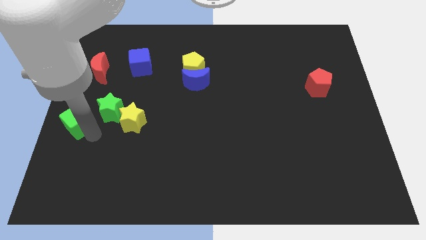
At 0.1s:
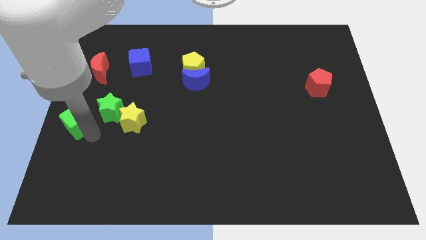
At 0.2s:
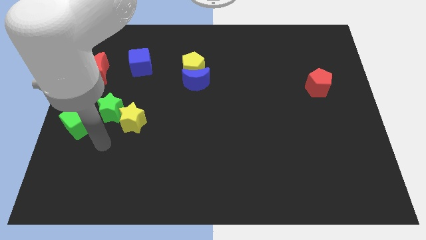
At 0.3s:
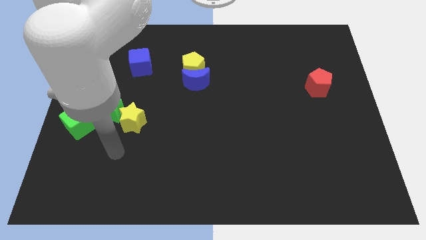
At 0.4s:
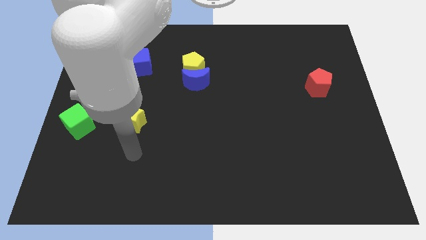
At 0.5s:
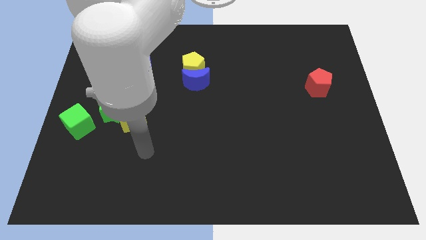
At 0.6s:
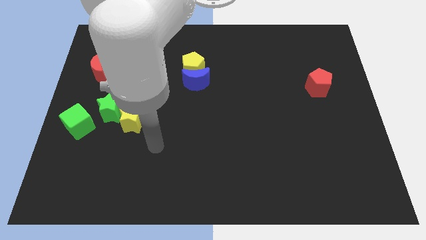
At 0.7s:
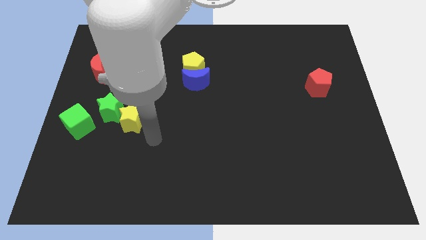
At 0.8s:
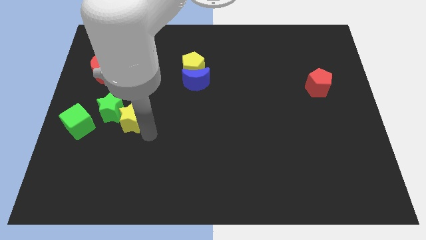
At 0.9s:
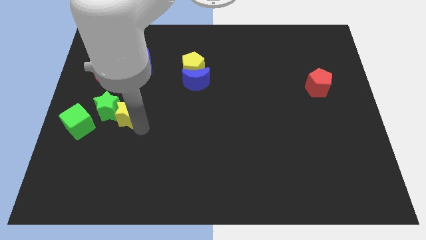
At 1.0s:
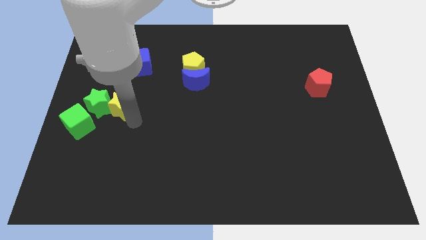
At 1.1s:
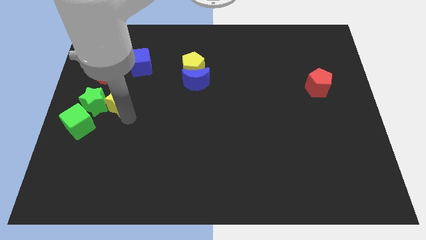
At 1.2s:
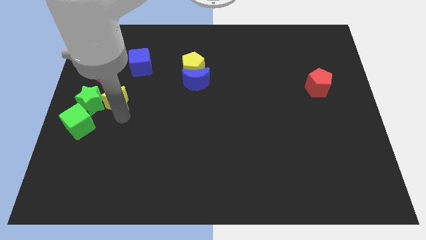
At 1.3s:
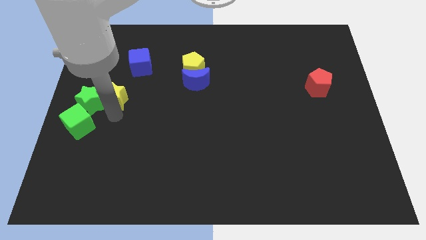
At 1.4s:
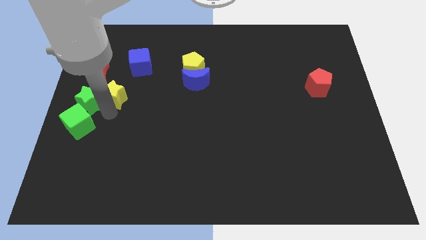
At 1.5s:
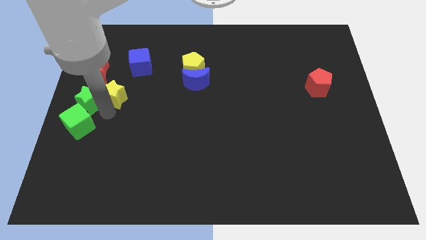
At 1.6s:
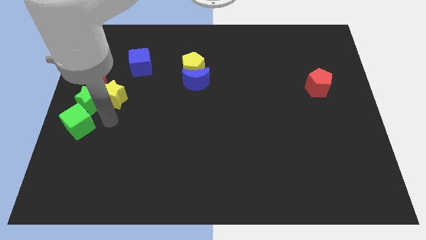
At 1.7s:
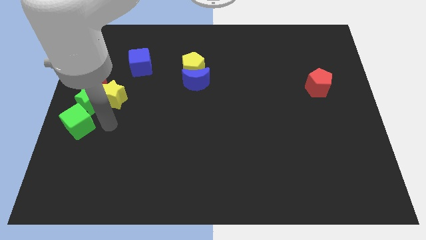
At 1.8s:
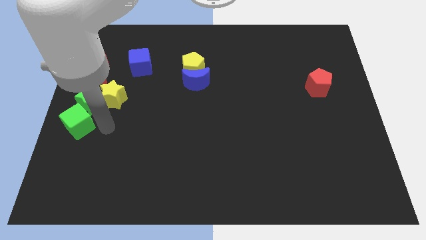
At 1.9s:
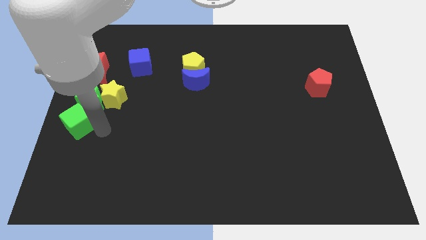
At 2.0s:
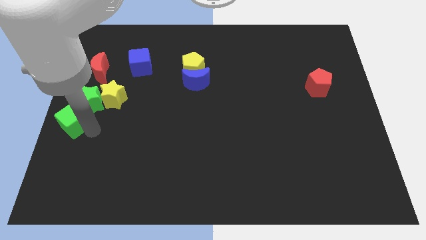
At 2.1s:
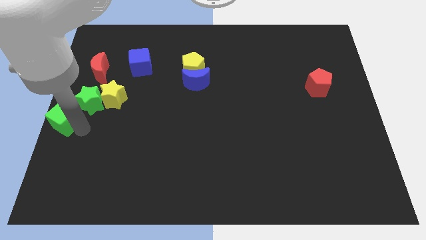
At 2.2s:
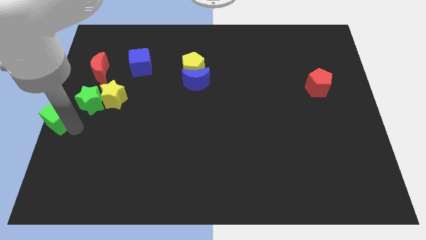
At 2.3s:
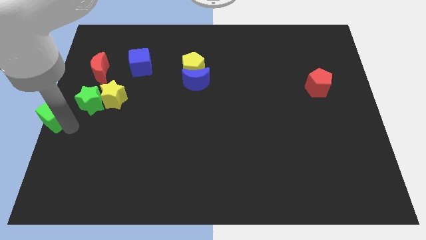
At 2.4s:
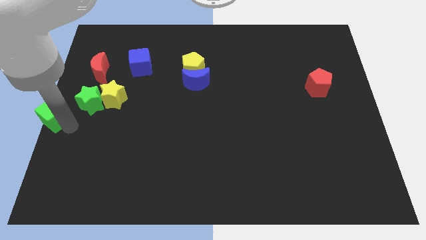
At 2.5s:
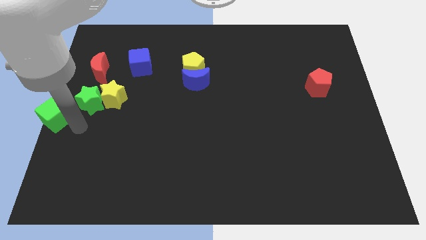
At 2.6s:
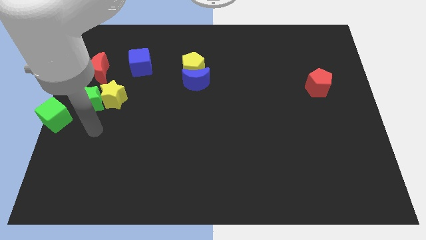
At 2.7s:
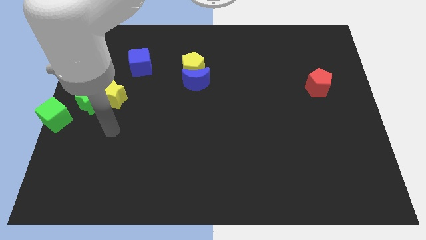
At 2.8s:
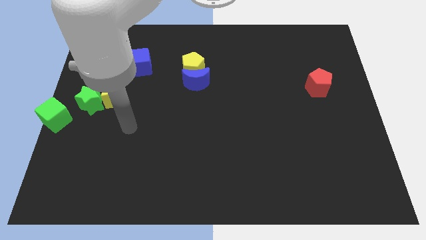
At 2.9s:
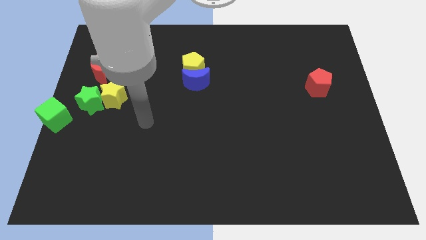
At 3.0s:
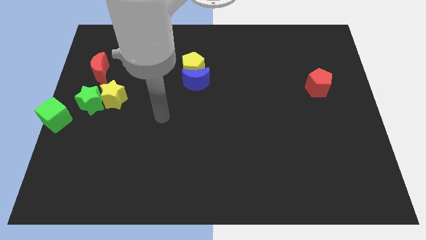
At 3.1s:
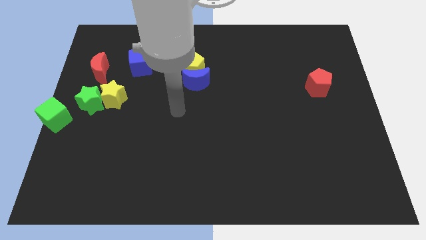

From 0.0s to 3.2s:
move the green cube towards the left center of the board

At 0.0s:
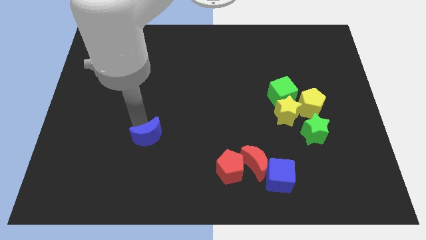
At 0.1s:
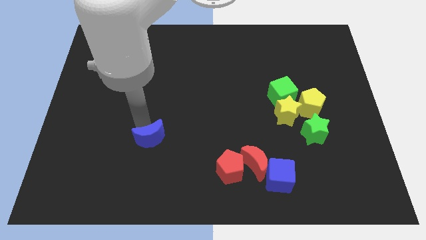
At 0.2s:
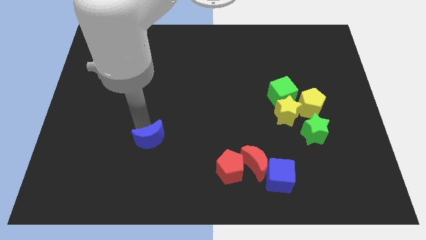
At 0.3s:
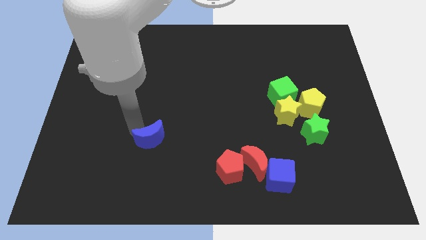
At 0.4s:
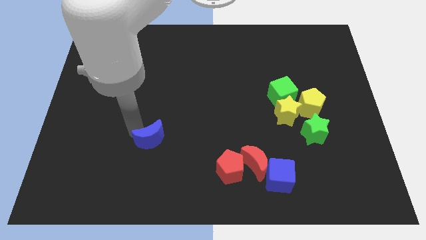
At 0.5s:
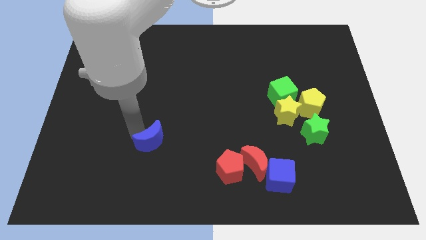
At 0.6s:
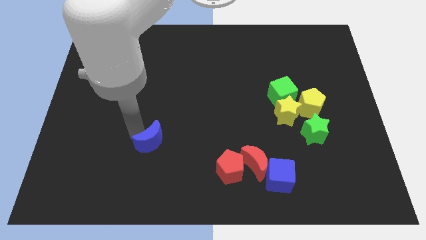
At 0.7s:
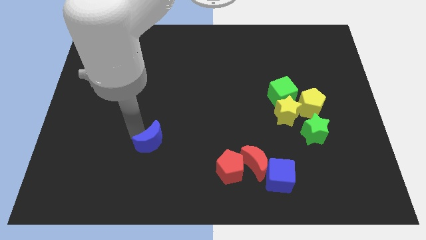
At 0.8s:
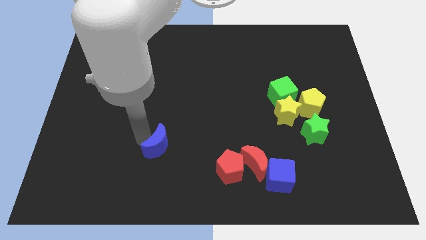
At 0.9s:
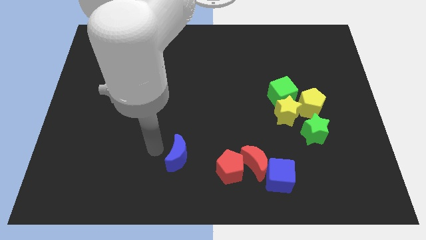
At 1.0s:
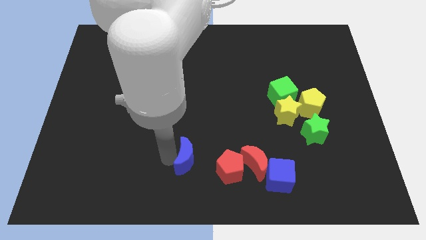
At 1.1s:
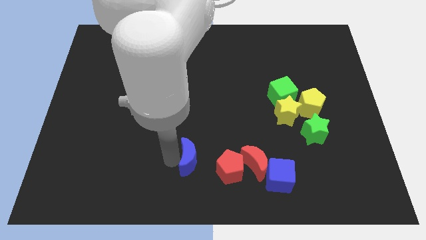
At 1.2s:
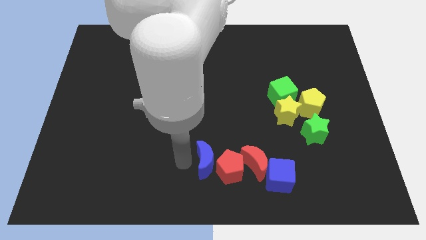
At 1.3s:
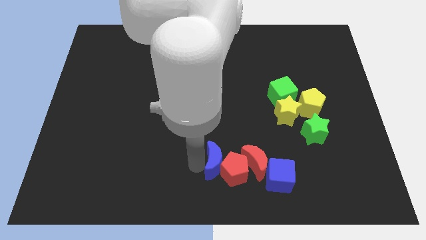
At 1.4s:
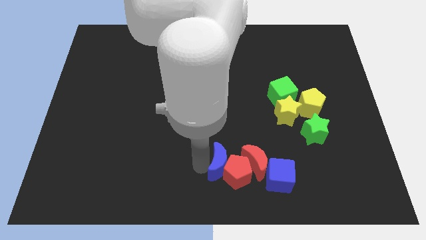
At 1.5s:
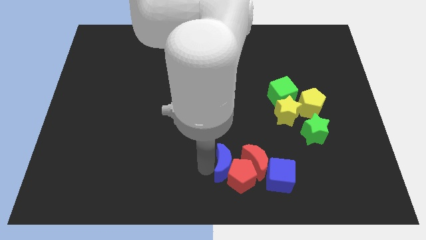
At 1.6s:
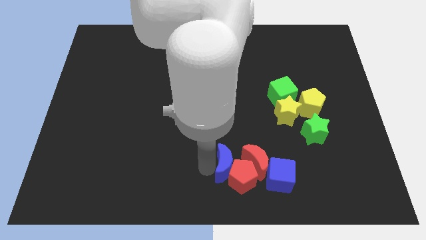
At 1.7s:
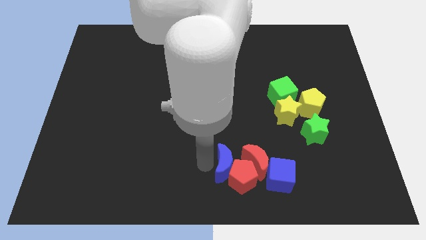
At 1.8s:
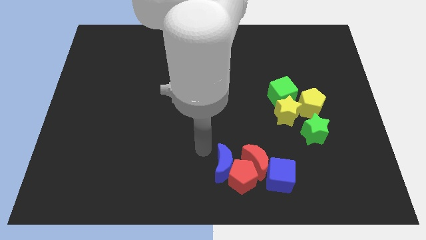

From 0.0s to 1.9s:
push the blue moon into the red pentagon

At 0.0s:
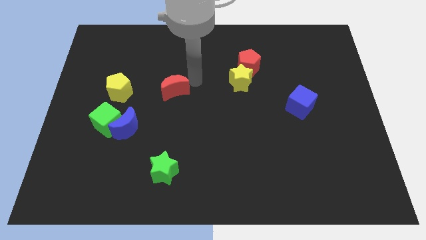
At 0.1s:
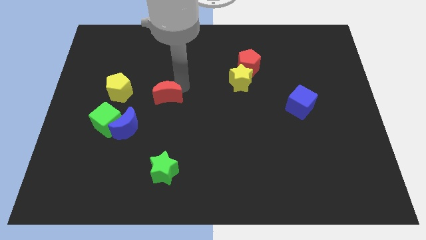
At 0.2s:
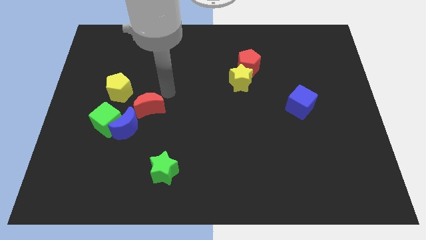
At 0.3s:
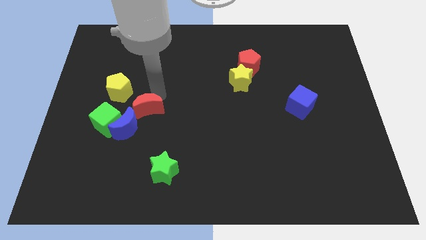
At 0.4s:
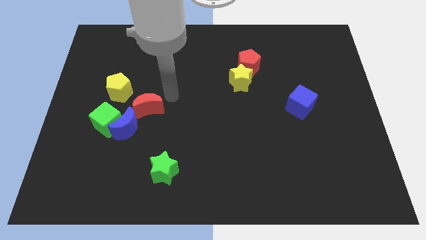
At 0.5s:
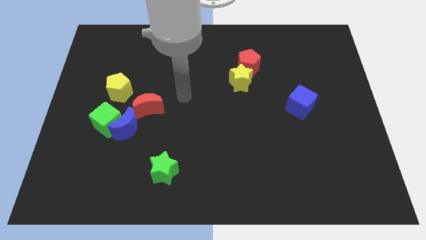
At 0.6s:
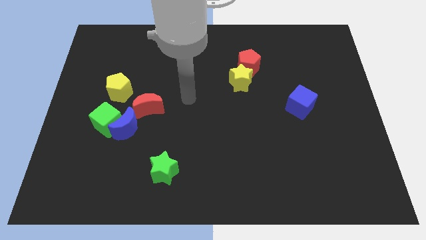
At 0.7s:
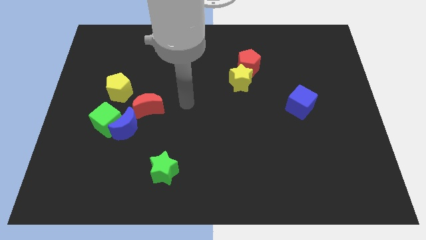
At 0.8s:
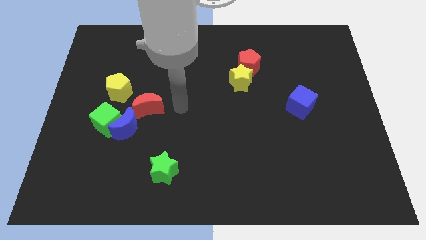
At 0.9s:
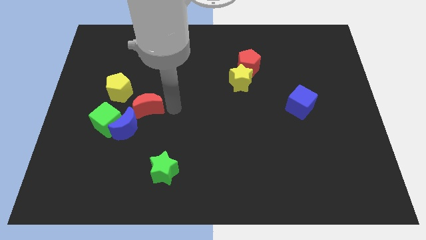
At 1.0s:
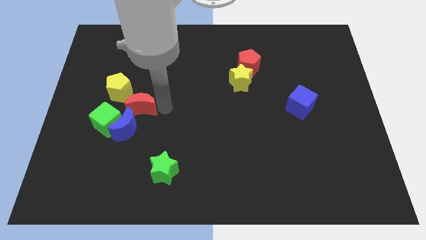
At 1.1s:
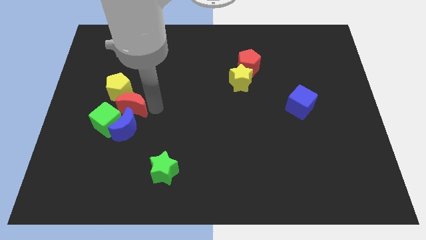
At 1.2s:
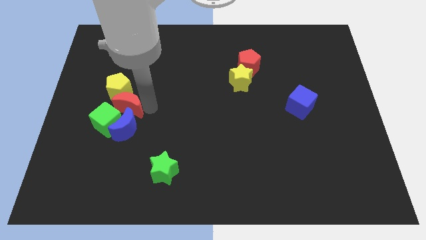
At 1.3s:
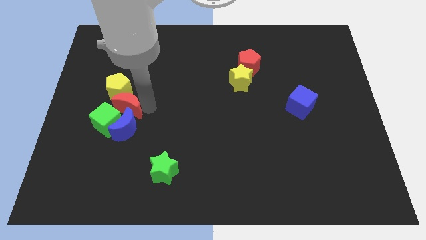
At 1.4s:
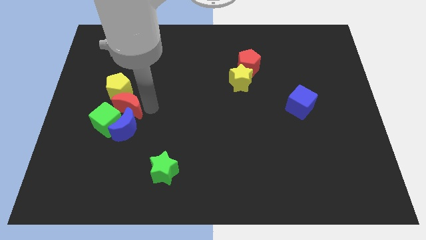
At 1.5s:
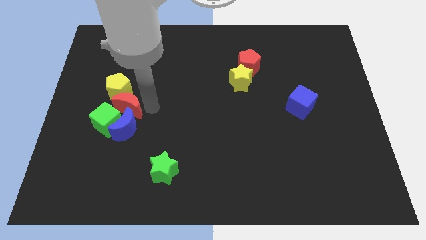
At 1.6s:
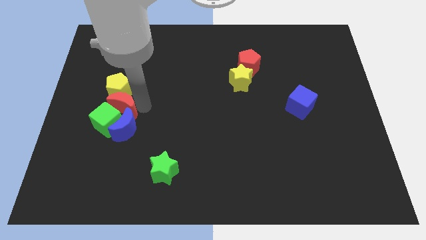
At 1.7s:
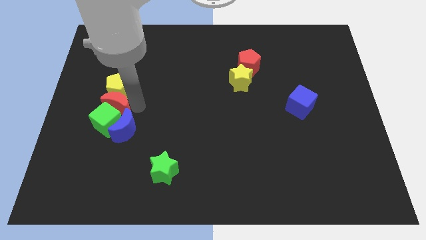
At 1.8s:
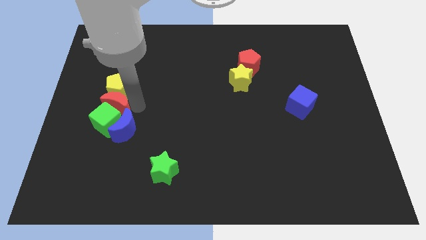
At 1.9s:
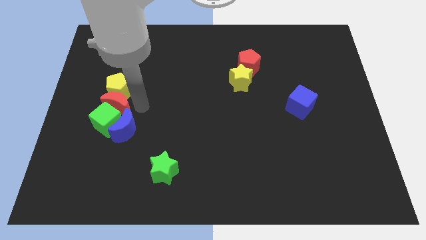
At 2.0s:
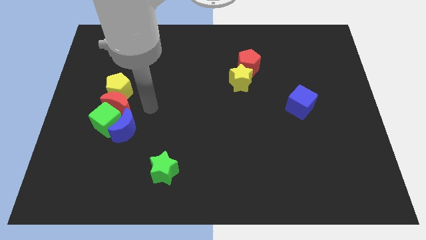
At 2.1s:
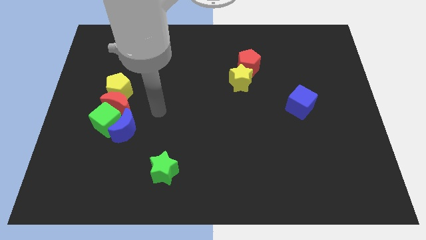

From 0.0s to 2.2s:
move the red crescent in between the yellow pentagon and green cube

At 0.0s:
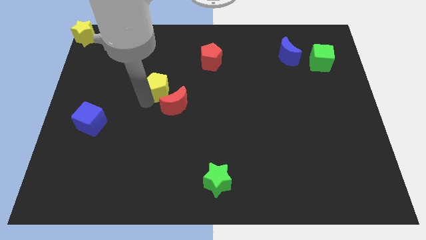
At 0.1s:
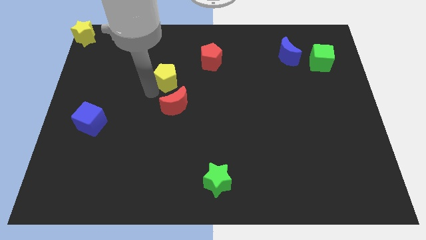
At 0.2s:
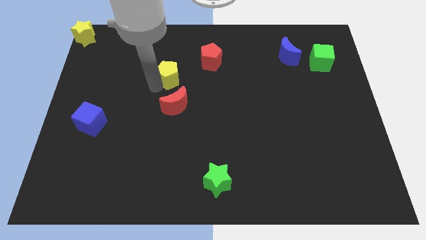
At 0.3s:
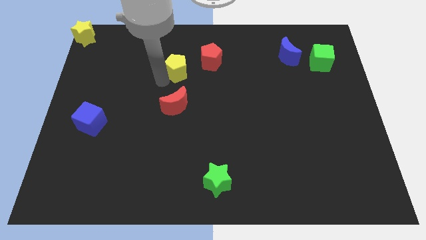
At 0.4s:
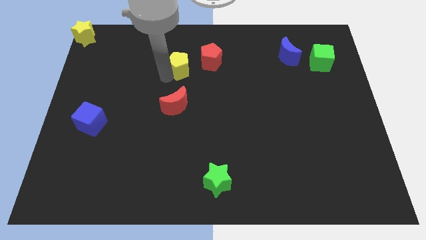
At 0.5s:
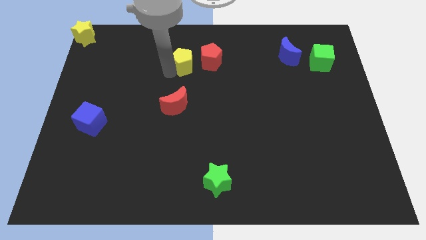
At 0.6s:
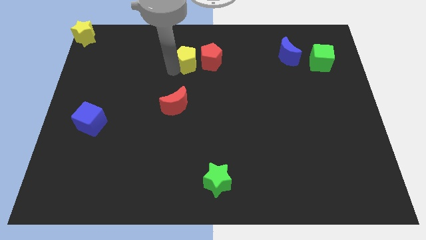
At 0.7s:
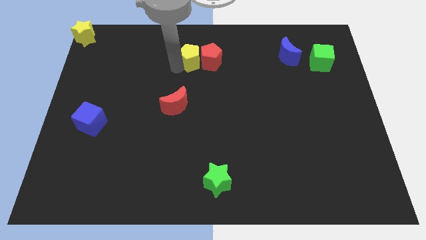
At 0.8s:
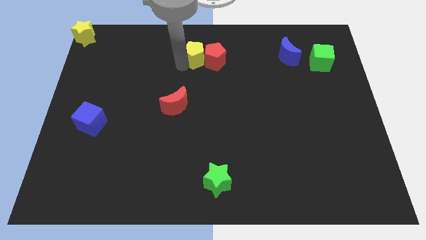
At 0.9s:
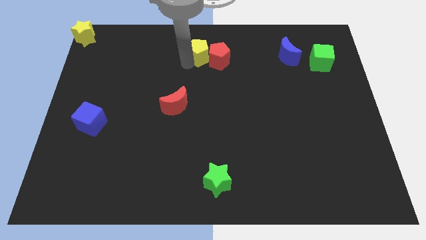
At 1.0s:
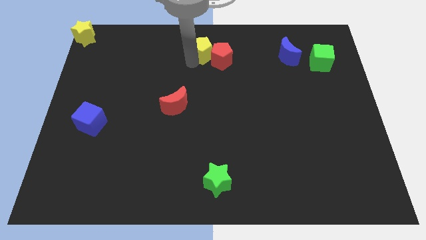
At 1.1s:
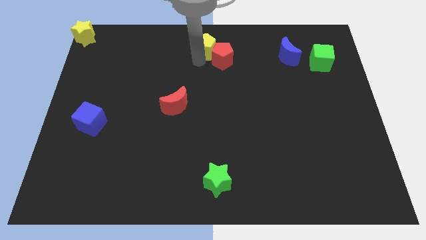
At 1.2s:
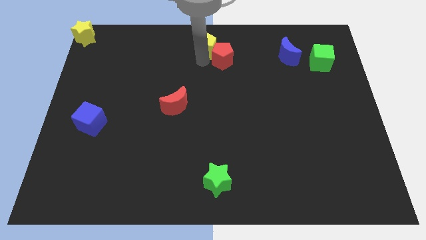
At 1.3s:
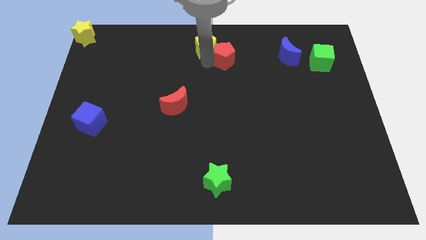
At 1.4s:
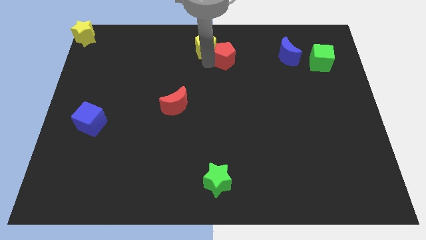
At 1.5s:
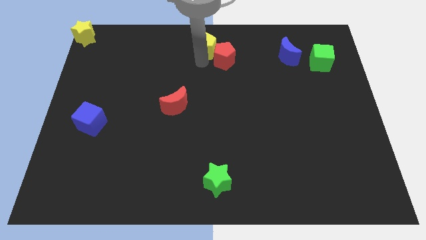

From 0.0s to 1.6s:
push the yellow pentagon into the red pentagon
